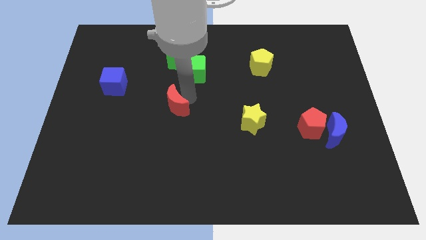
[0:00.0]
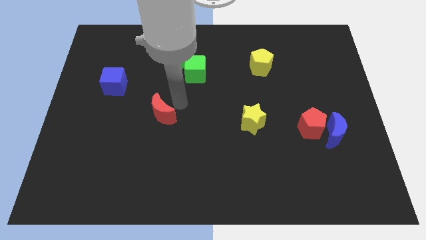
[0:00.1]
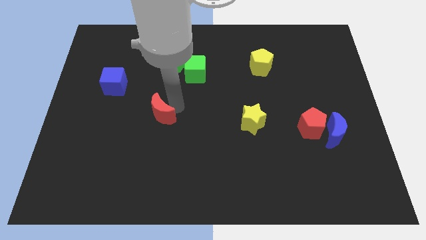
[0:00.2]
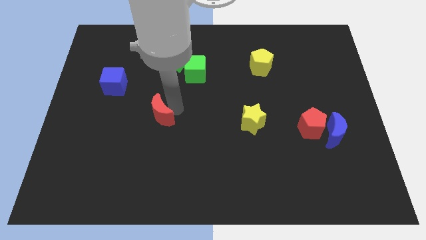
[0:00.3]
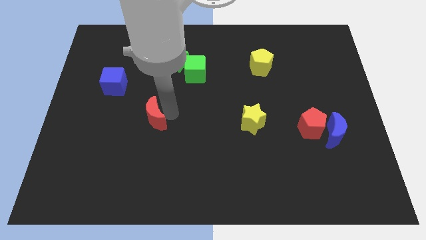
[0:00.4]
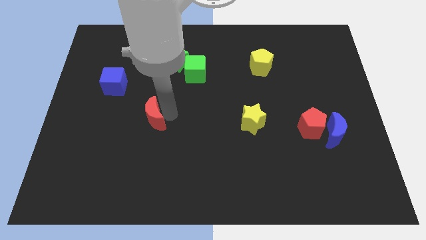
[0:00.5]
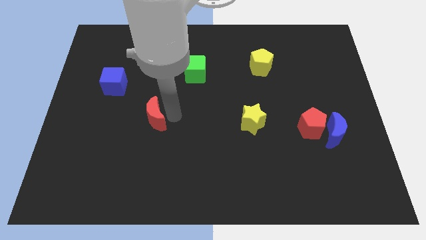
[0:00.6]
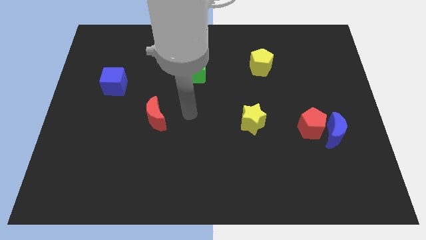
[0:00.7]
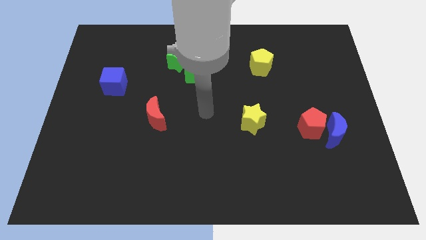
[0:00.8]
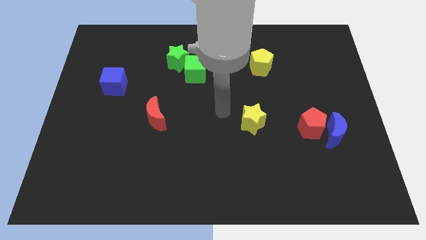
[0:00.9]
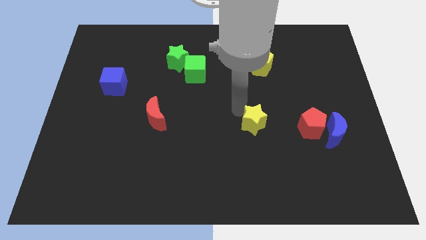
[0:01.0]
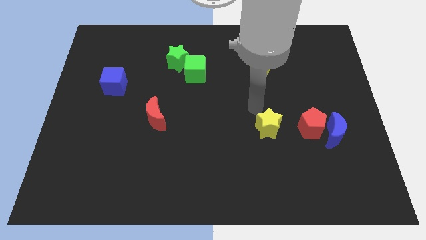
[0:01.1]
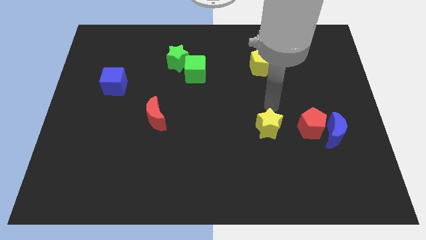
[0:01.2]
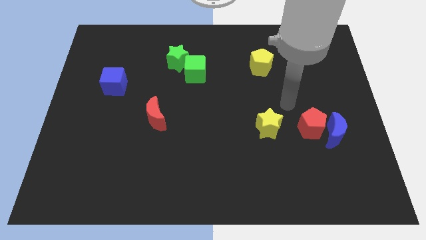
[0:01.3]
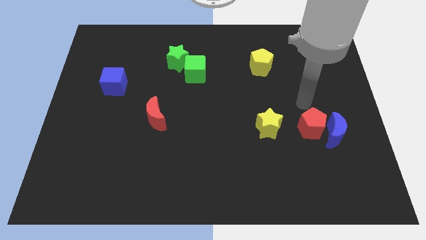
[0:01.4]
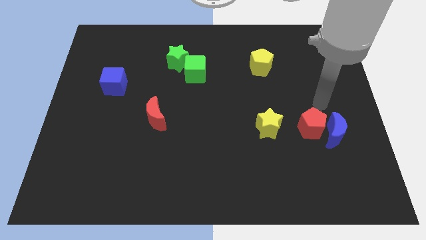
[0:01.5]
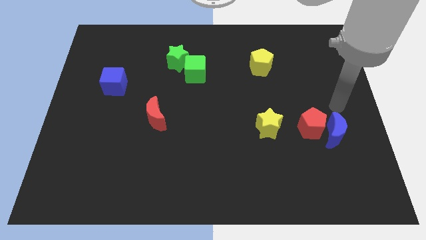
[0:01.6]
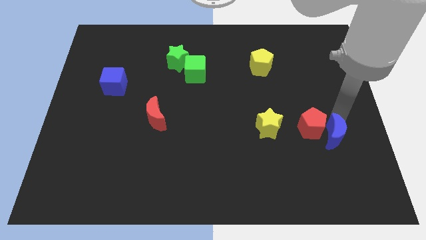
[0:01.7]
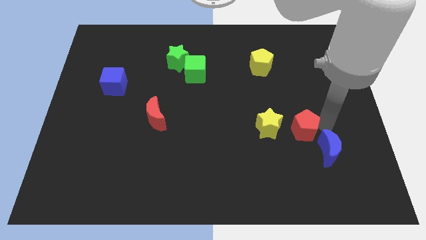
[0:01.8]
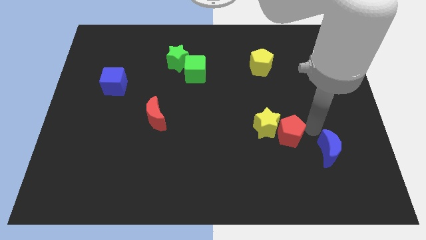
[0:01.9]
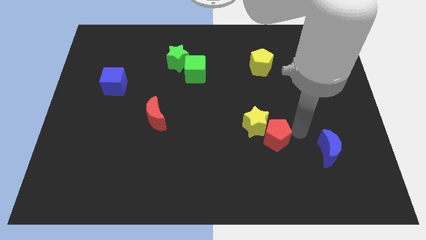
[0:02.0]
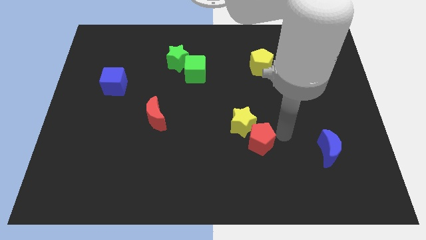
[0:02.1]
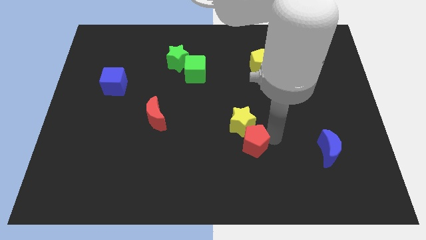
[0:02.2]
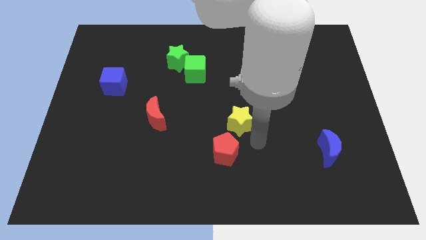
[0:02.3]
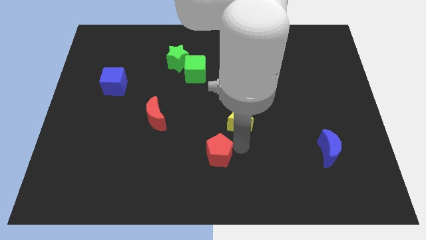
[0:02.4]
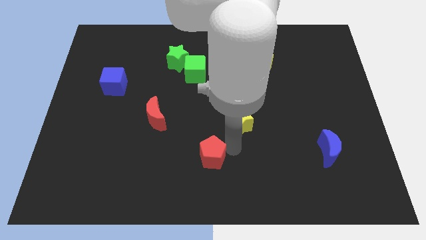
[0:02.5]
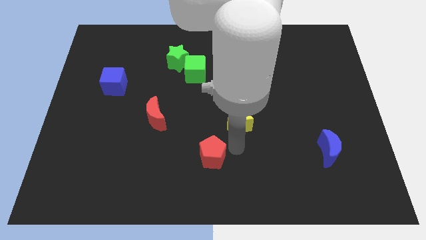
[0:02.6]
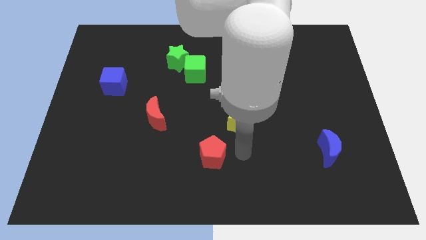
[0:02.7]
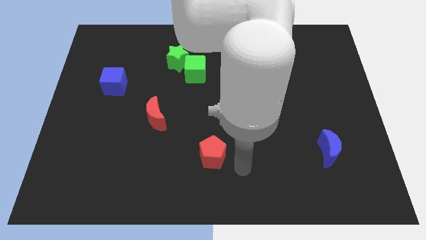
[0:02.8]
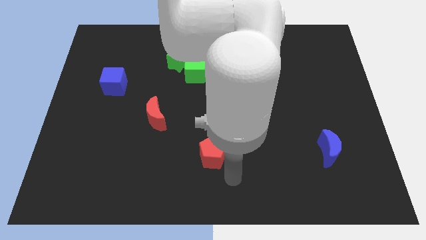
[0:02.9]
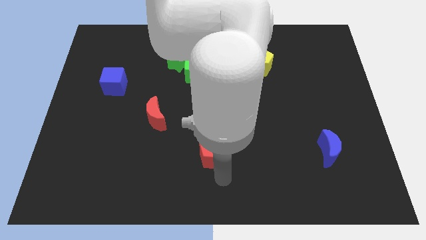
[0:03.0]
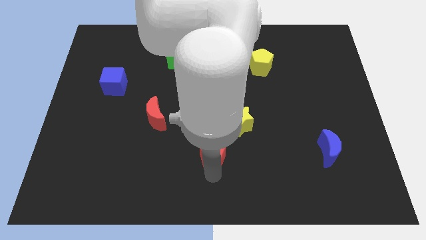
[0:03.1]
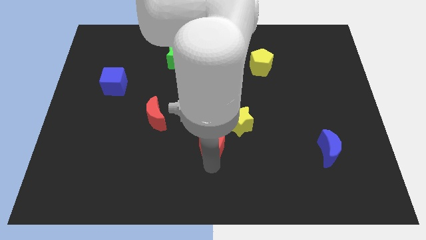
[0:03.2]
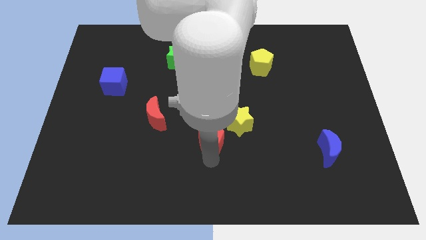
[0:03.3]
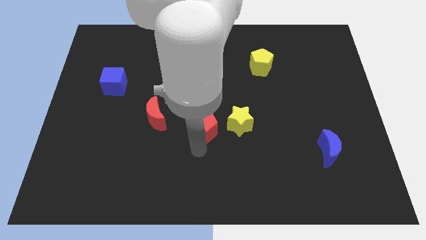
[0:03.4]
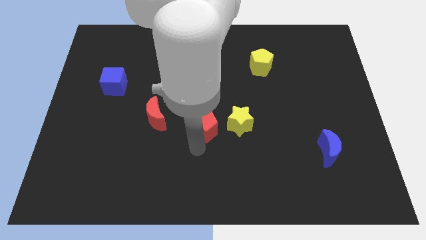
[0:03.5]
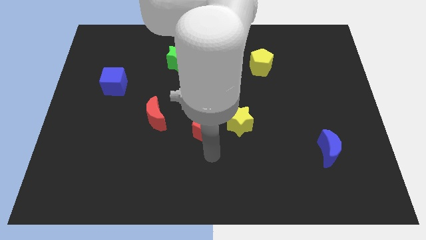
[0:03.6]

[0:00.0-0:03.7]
push the group of blocks towards the left side of the board

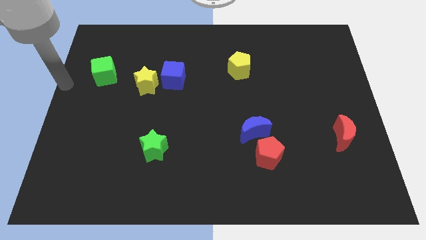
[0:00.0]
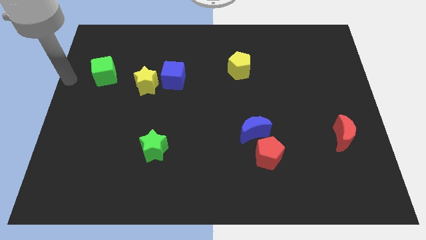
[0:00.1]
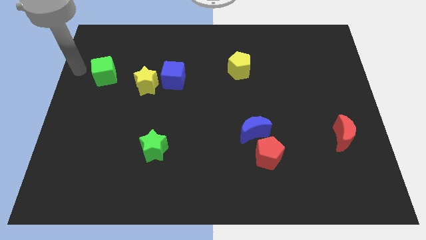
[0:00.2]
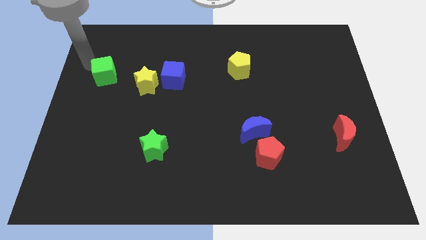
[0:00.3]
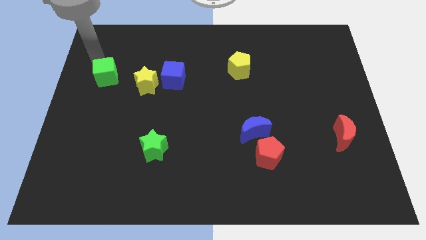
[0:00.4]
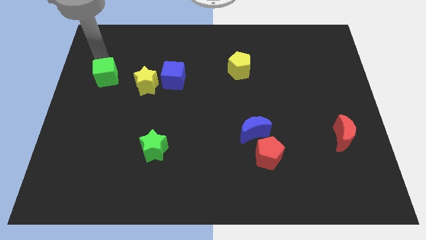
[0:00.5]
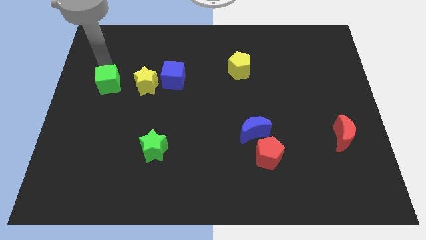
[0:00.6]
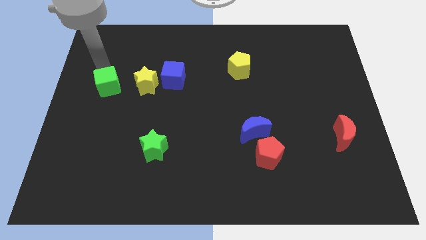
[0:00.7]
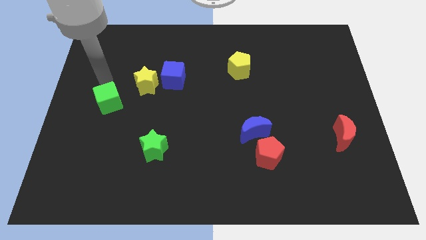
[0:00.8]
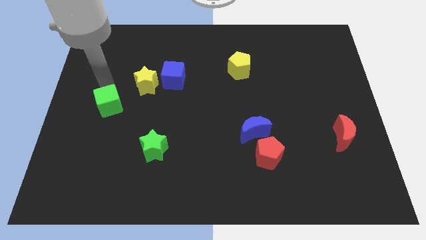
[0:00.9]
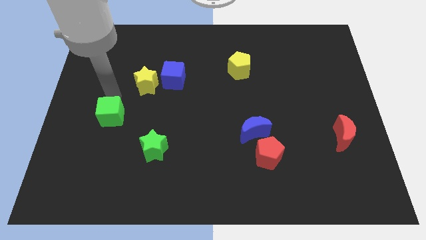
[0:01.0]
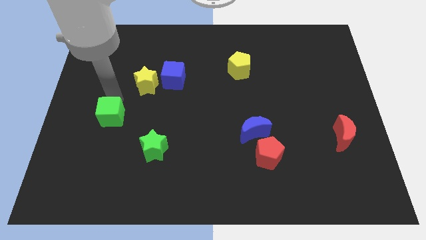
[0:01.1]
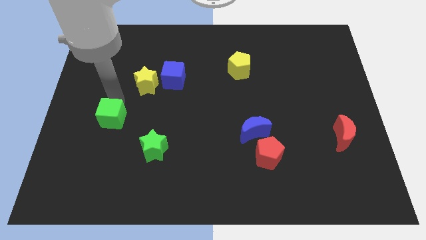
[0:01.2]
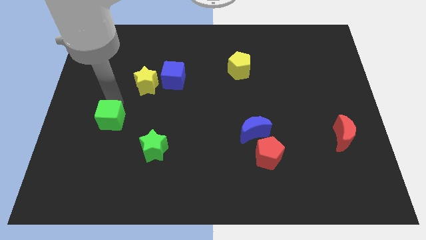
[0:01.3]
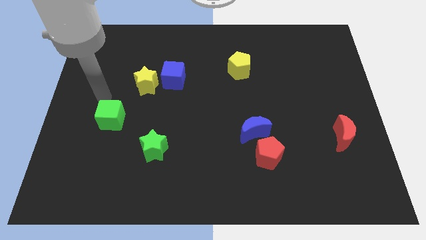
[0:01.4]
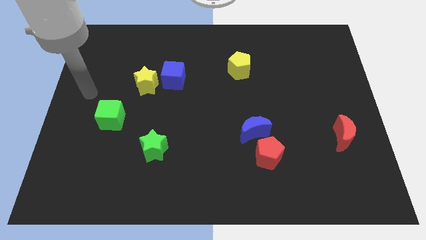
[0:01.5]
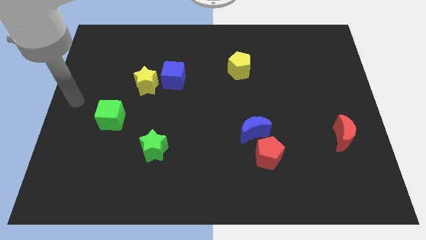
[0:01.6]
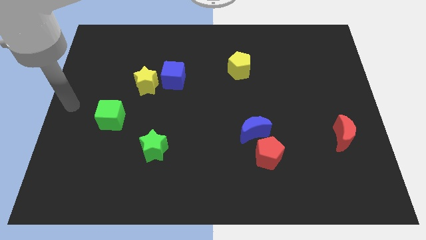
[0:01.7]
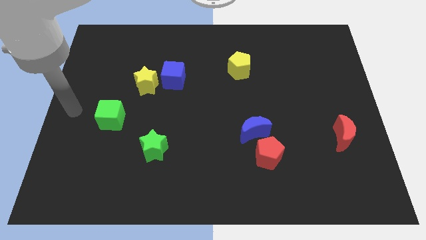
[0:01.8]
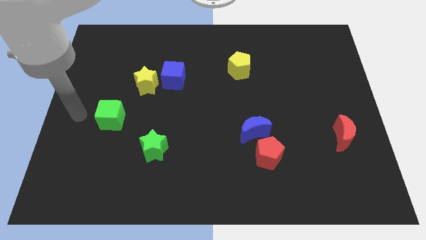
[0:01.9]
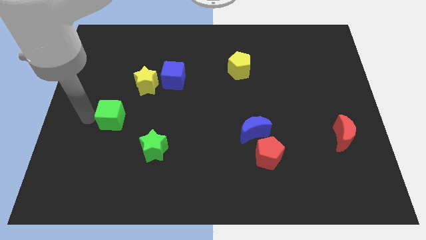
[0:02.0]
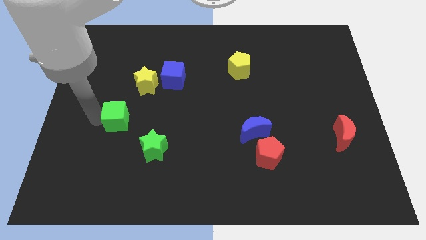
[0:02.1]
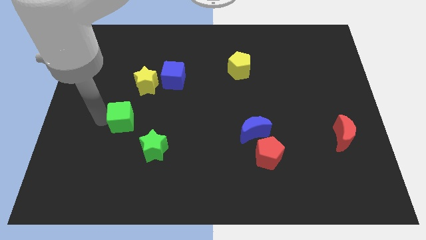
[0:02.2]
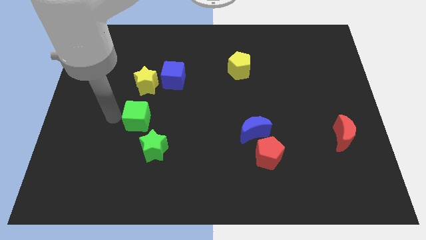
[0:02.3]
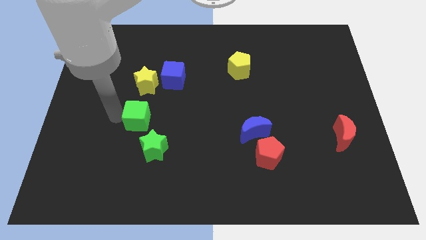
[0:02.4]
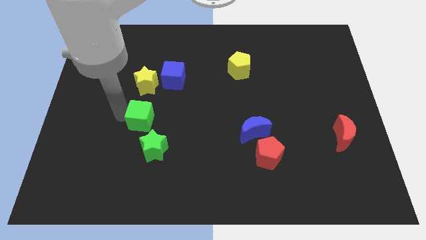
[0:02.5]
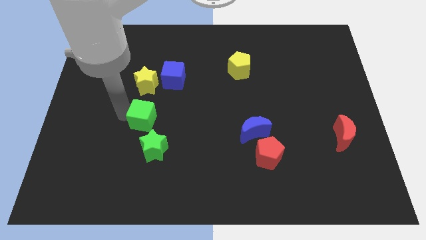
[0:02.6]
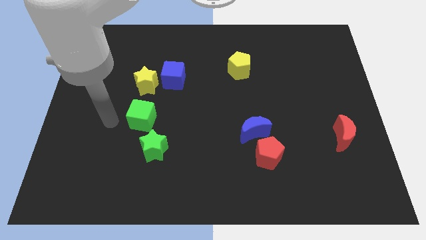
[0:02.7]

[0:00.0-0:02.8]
move the green cube to the top left of the green star

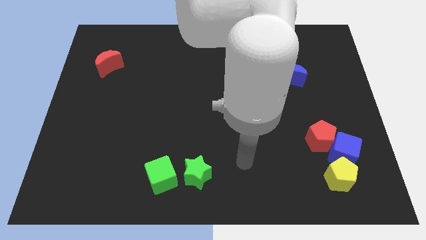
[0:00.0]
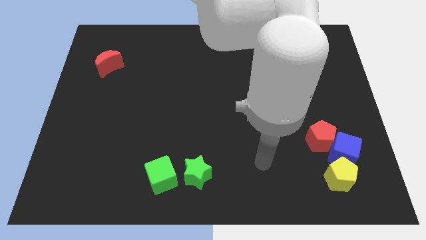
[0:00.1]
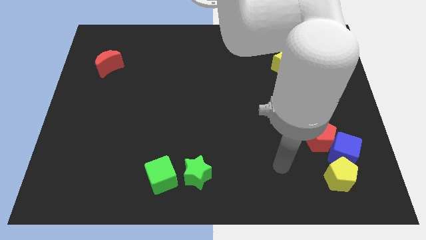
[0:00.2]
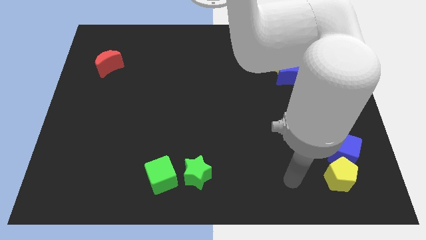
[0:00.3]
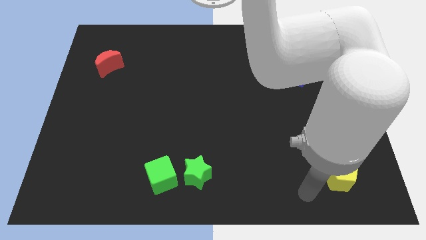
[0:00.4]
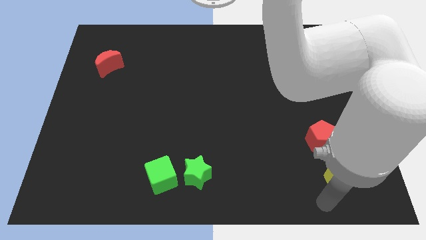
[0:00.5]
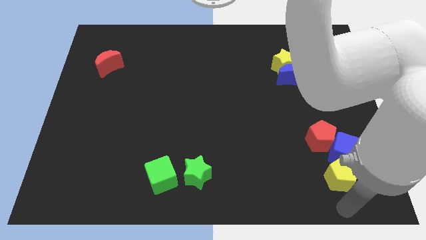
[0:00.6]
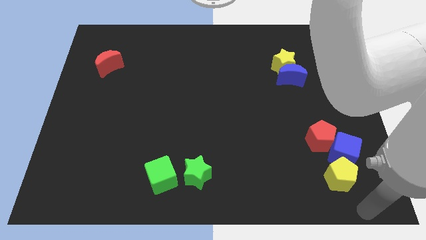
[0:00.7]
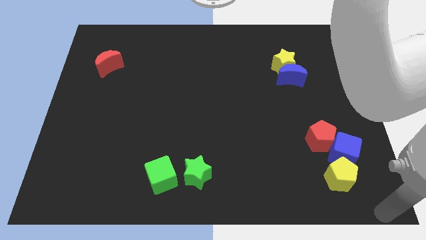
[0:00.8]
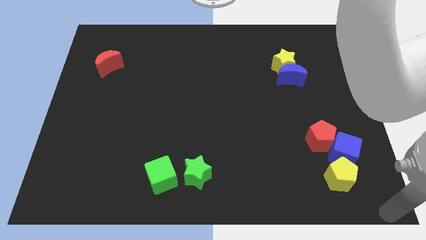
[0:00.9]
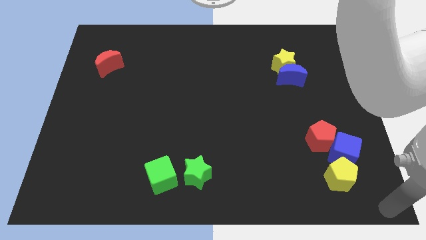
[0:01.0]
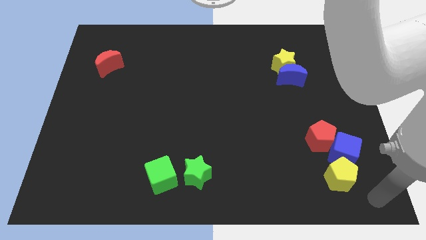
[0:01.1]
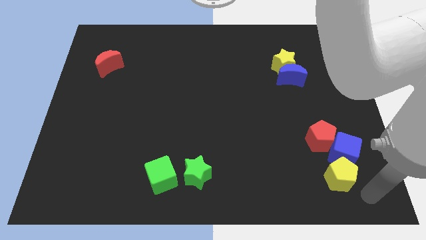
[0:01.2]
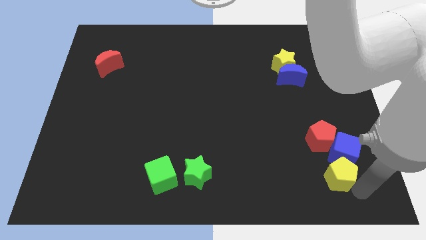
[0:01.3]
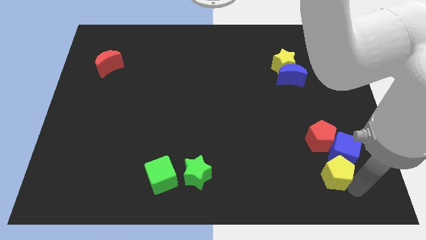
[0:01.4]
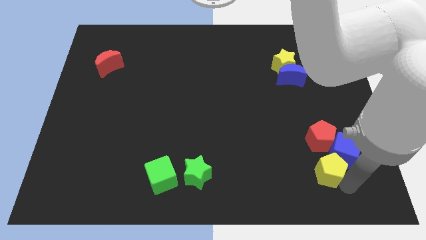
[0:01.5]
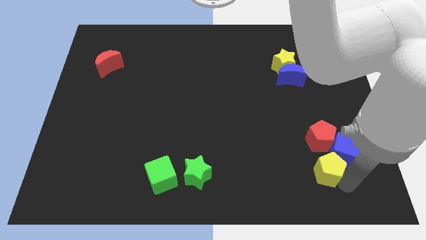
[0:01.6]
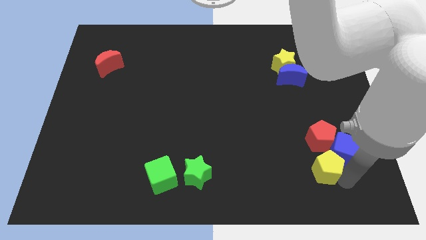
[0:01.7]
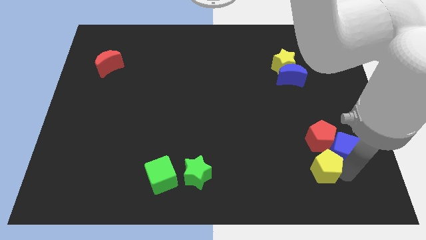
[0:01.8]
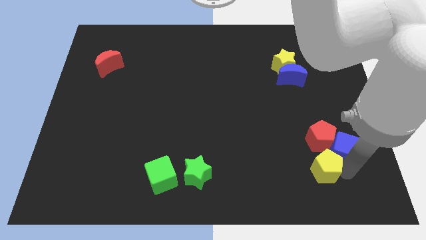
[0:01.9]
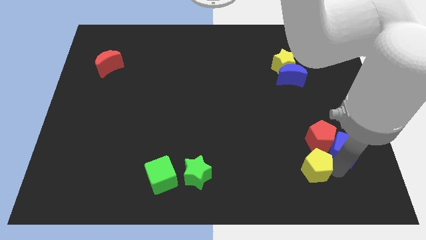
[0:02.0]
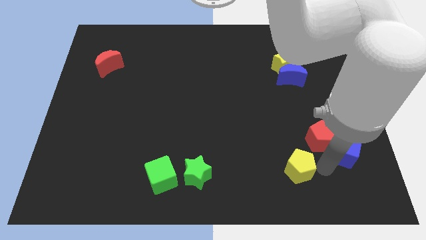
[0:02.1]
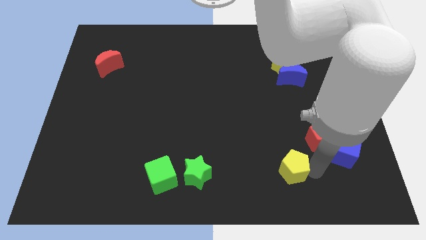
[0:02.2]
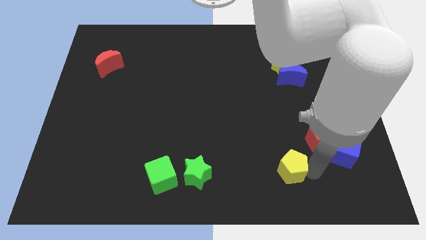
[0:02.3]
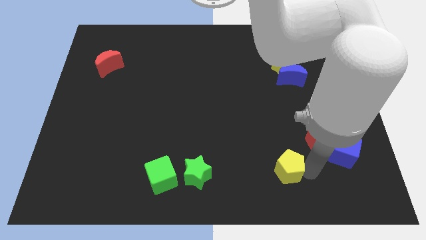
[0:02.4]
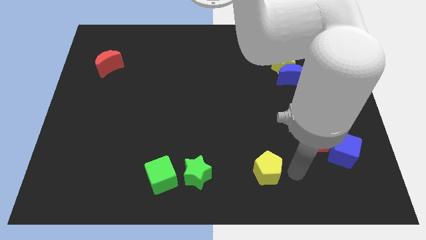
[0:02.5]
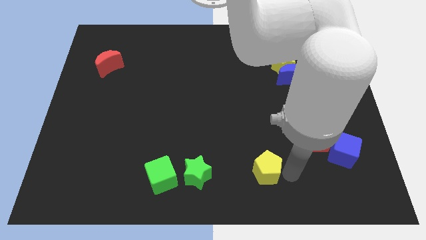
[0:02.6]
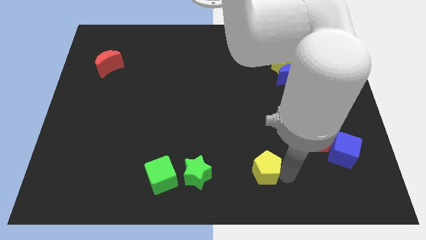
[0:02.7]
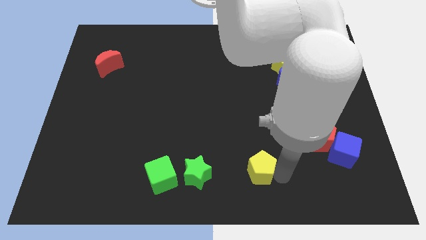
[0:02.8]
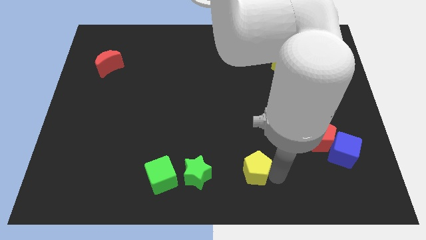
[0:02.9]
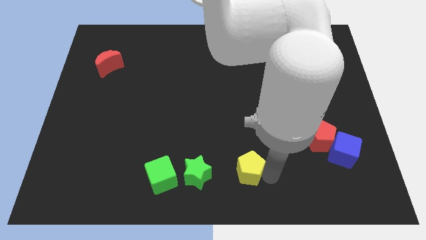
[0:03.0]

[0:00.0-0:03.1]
slide the yellow pentagon diagonally bottom left to the red pentagon
